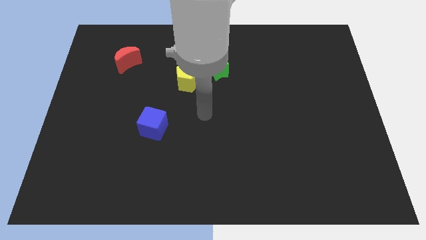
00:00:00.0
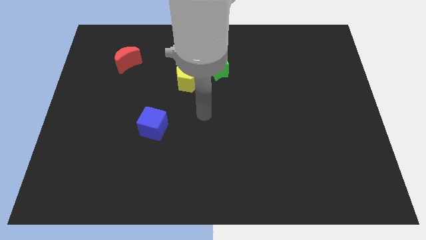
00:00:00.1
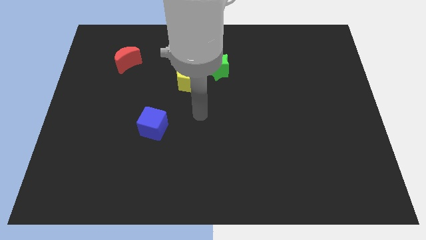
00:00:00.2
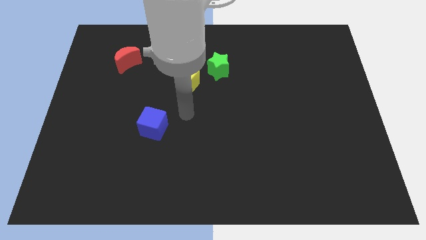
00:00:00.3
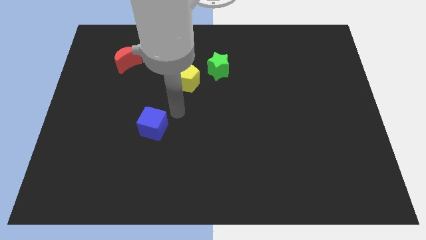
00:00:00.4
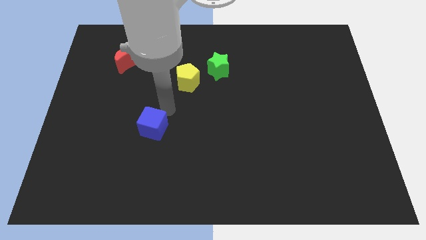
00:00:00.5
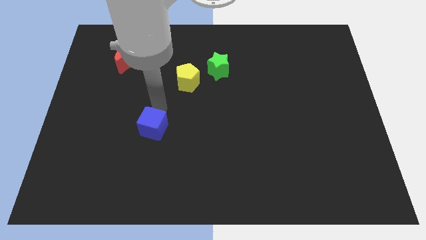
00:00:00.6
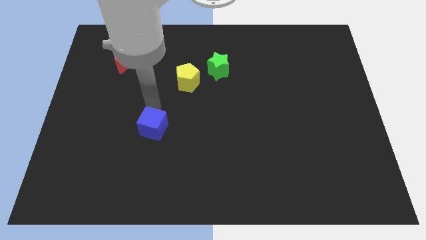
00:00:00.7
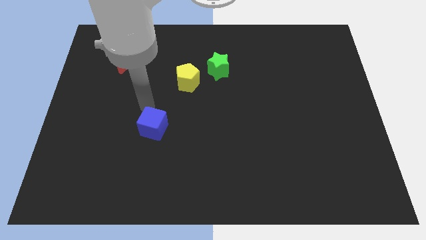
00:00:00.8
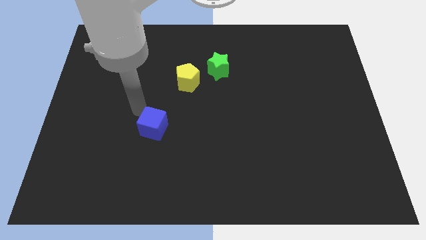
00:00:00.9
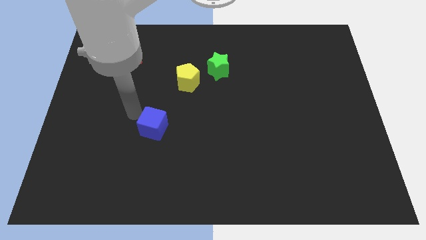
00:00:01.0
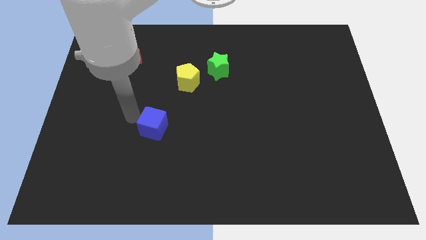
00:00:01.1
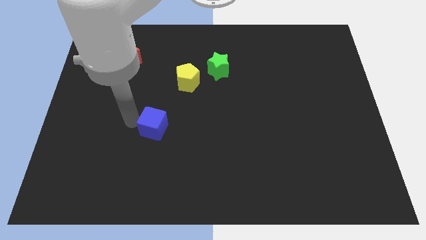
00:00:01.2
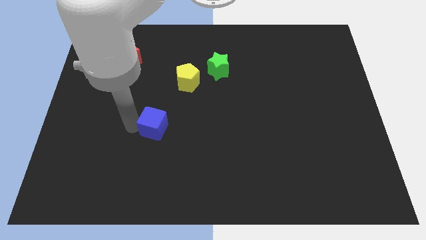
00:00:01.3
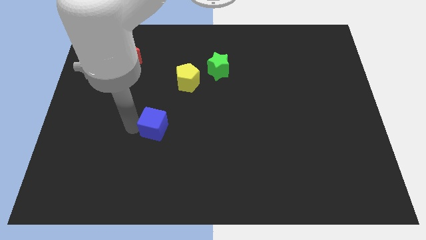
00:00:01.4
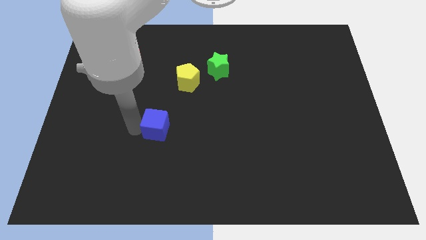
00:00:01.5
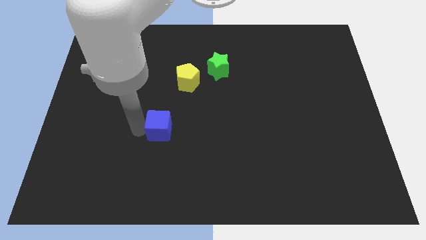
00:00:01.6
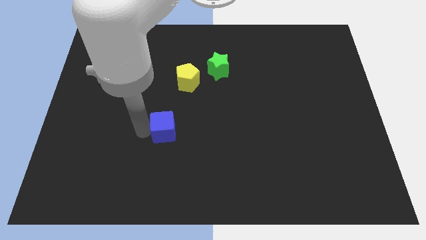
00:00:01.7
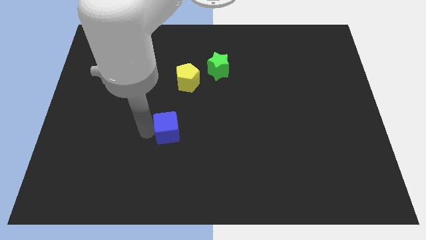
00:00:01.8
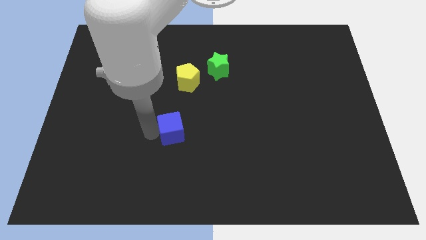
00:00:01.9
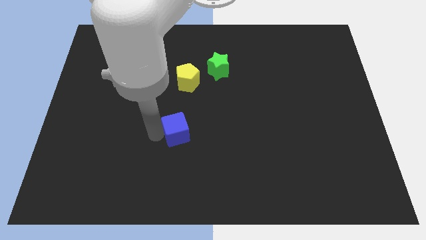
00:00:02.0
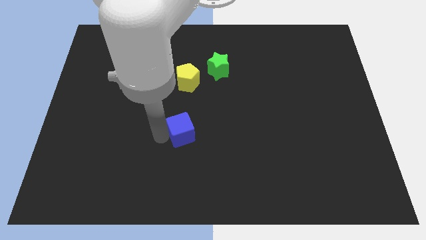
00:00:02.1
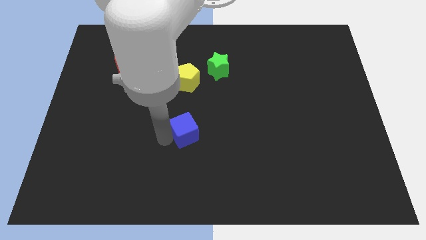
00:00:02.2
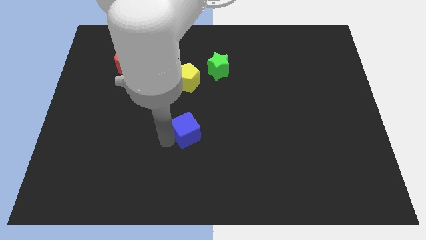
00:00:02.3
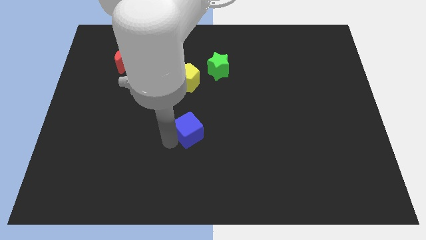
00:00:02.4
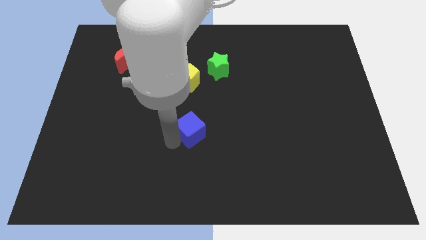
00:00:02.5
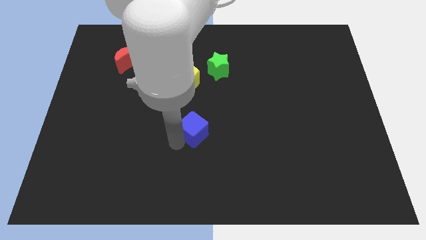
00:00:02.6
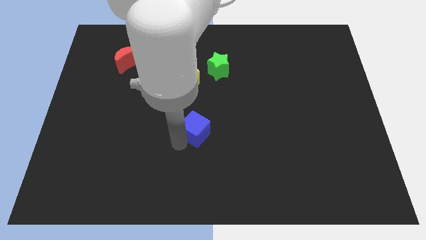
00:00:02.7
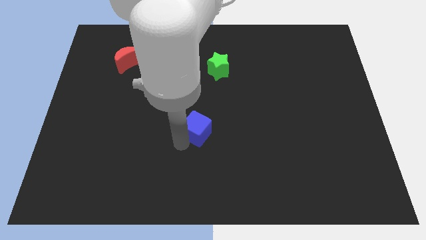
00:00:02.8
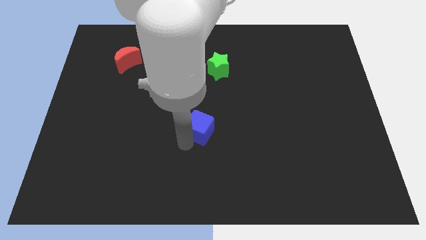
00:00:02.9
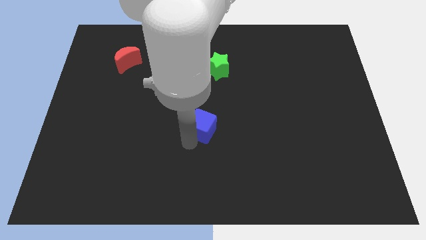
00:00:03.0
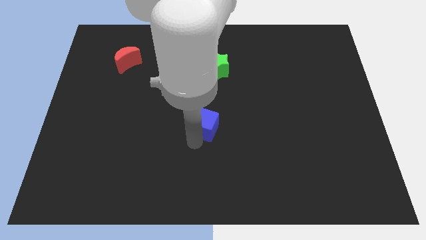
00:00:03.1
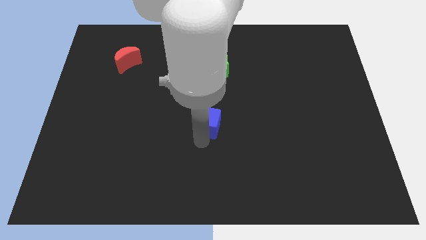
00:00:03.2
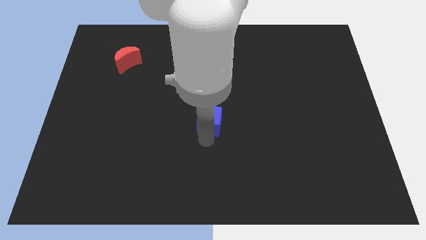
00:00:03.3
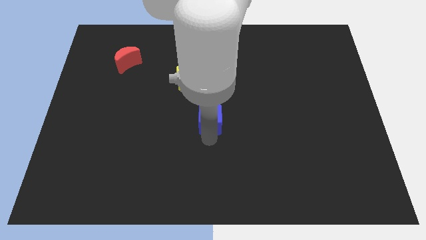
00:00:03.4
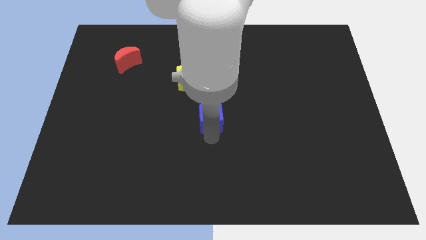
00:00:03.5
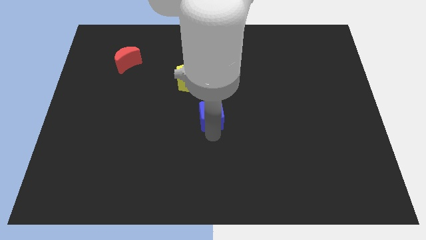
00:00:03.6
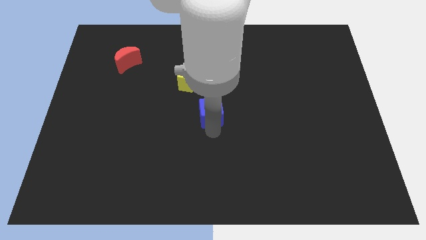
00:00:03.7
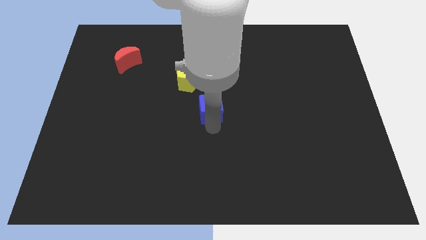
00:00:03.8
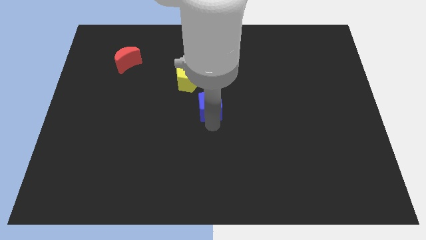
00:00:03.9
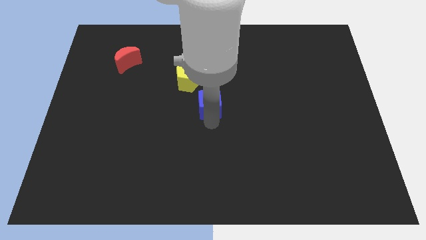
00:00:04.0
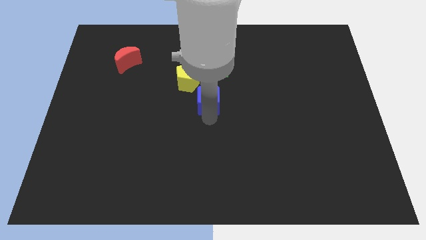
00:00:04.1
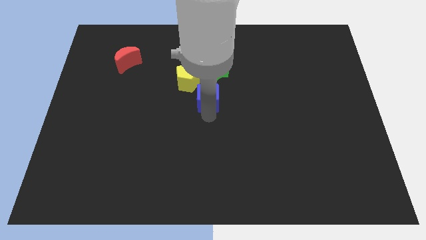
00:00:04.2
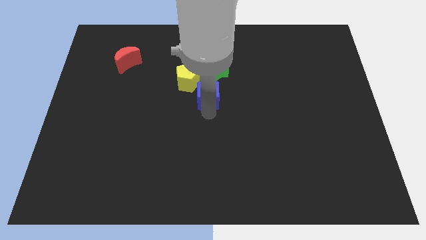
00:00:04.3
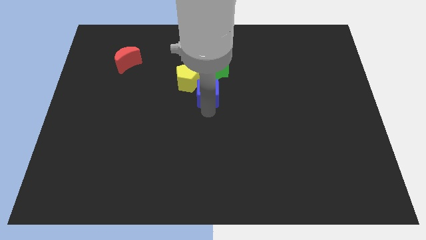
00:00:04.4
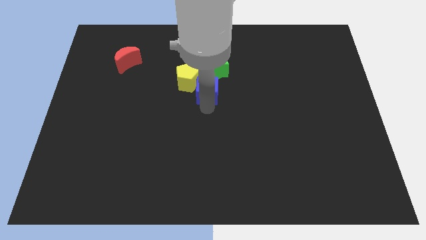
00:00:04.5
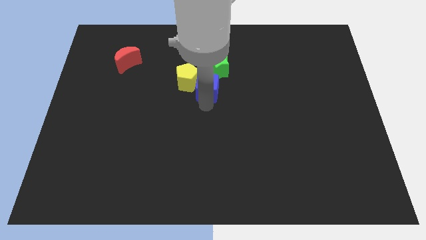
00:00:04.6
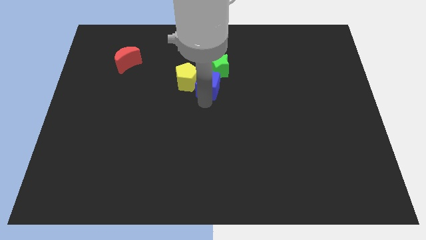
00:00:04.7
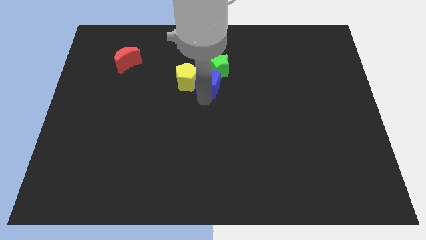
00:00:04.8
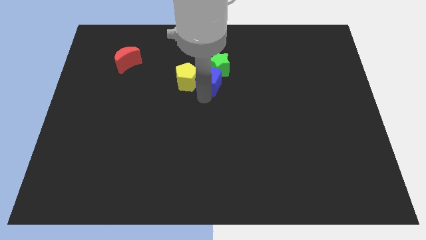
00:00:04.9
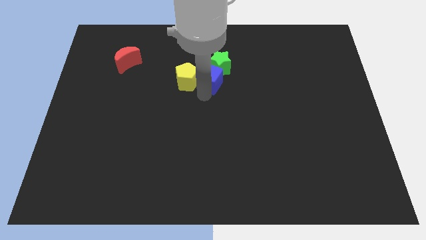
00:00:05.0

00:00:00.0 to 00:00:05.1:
push the blue cube towards the green star

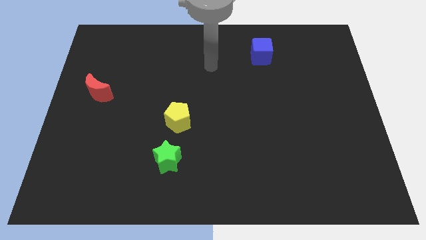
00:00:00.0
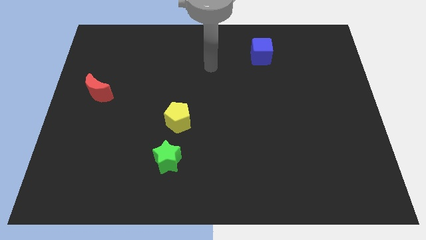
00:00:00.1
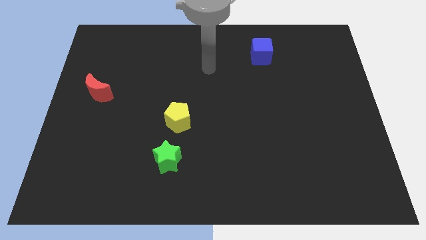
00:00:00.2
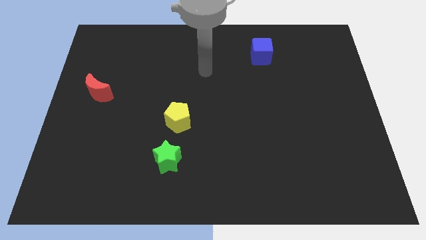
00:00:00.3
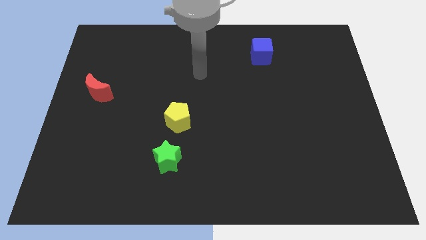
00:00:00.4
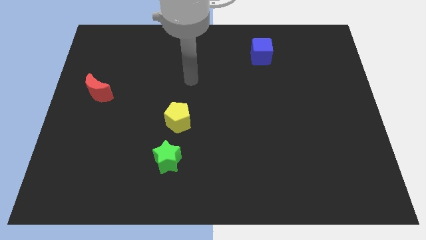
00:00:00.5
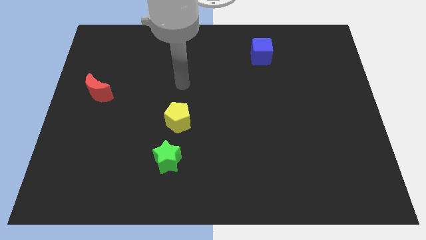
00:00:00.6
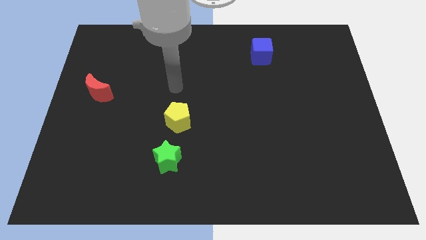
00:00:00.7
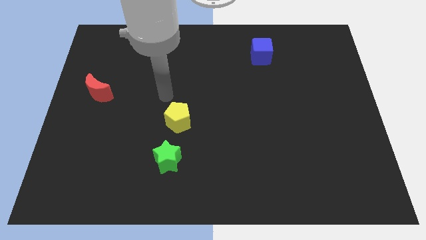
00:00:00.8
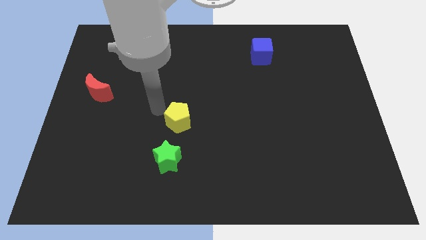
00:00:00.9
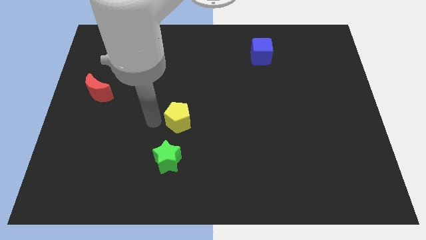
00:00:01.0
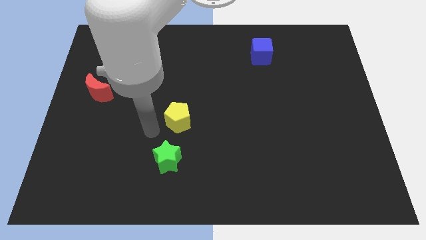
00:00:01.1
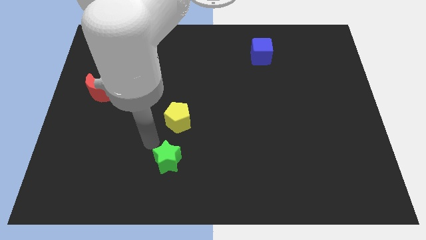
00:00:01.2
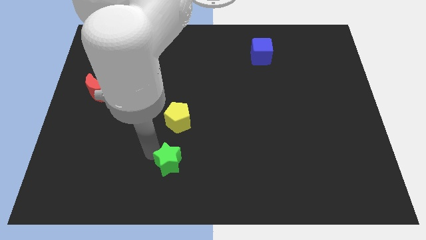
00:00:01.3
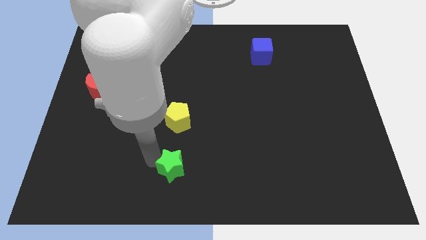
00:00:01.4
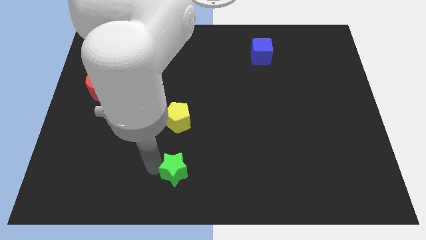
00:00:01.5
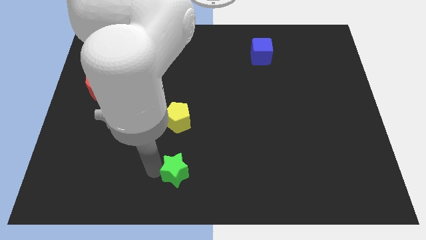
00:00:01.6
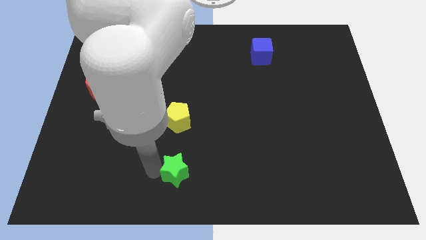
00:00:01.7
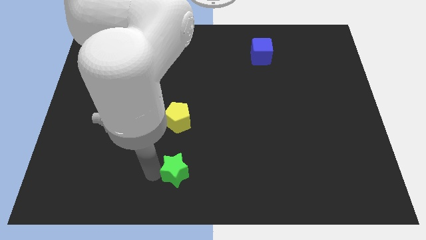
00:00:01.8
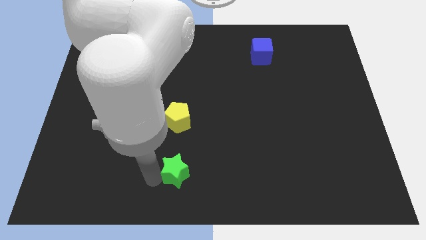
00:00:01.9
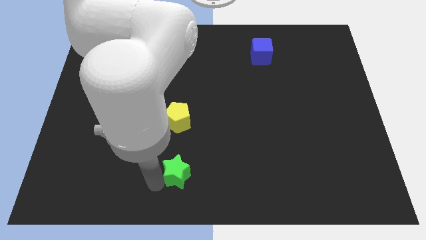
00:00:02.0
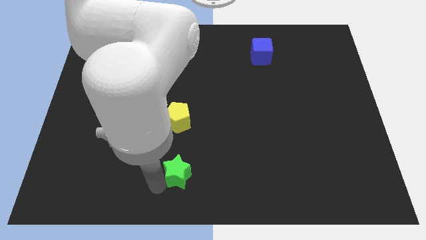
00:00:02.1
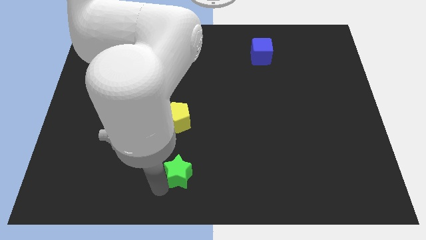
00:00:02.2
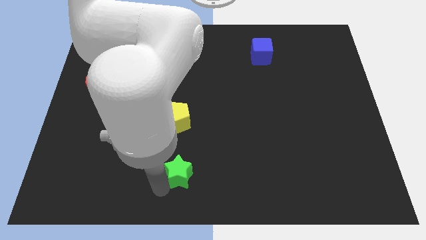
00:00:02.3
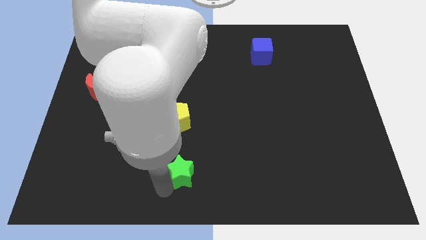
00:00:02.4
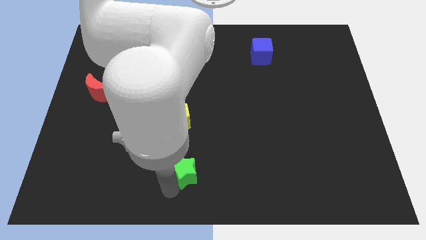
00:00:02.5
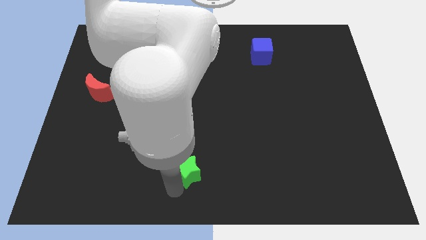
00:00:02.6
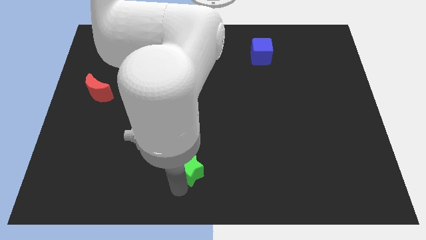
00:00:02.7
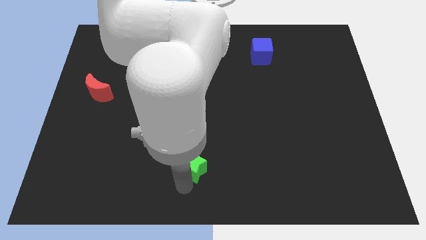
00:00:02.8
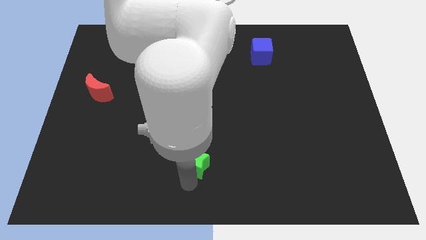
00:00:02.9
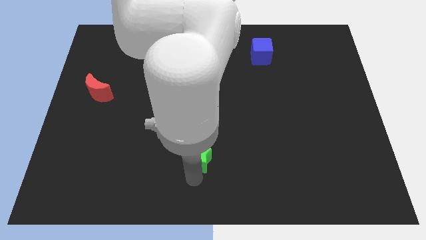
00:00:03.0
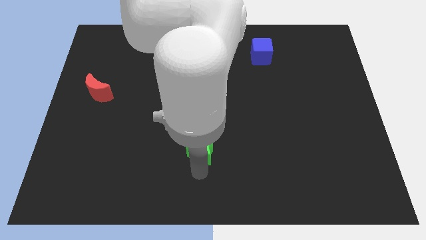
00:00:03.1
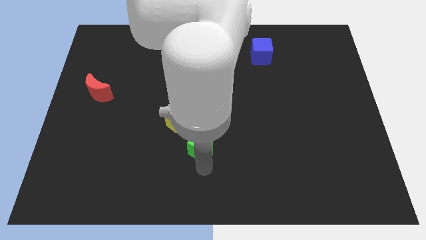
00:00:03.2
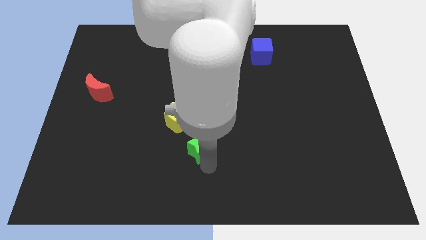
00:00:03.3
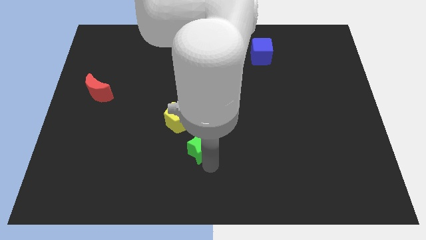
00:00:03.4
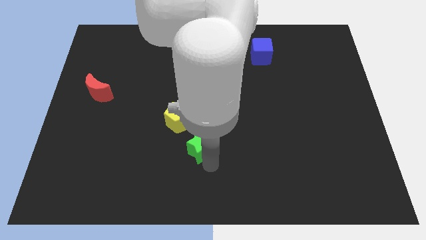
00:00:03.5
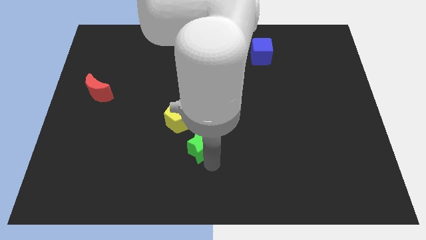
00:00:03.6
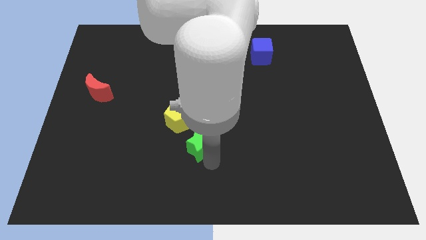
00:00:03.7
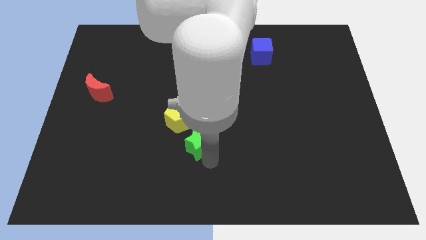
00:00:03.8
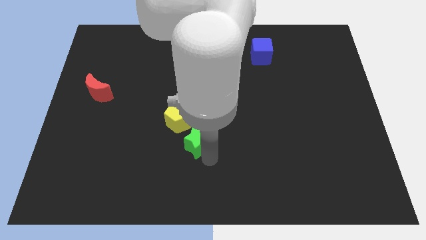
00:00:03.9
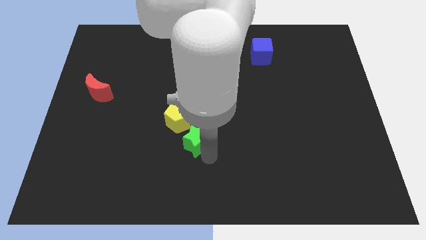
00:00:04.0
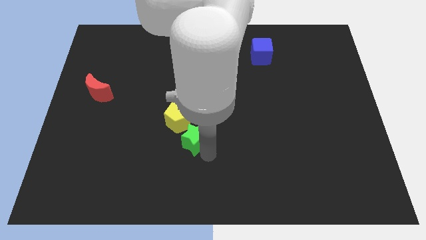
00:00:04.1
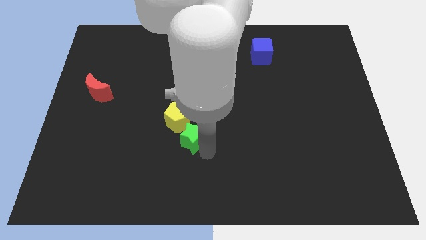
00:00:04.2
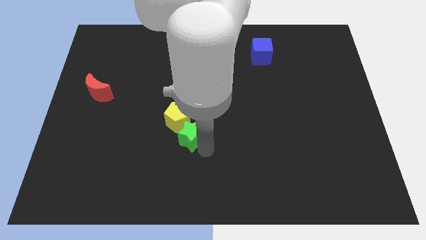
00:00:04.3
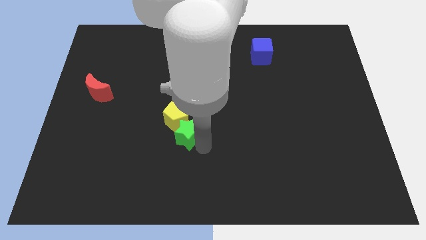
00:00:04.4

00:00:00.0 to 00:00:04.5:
slide the green star next to the pentagon
